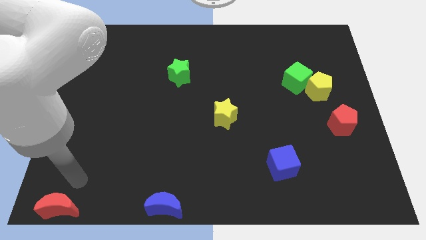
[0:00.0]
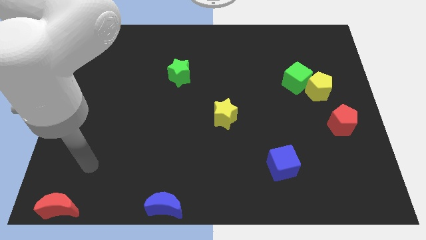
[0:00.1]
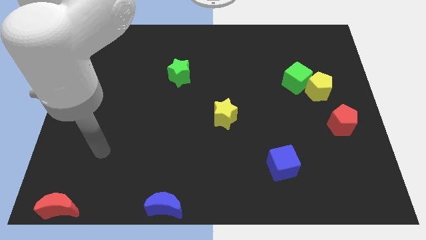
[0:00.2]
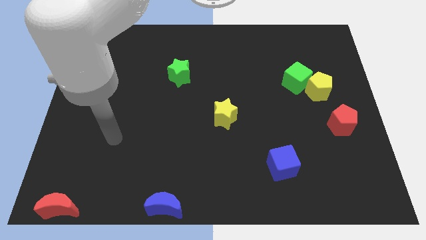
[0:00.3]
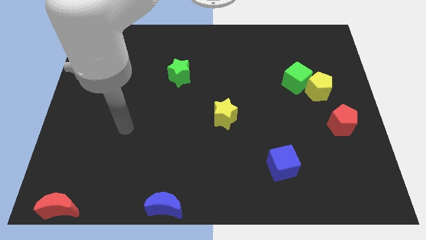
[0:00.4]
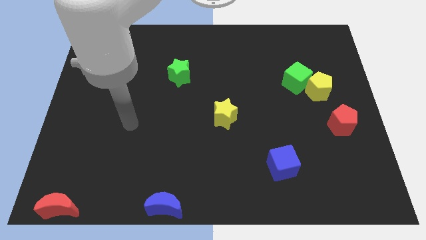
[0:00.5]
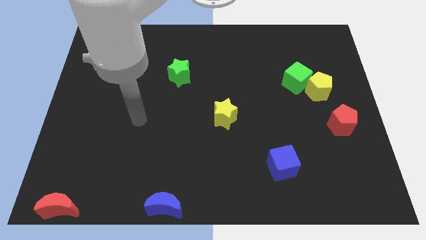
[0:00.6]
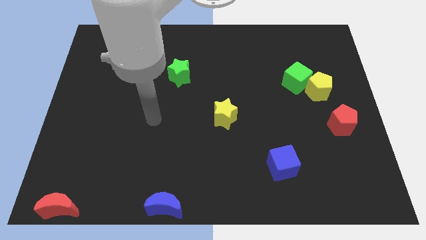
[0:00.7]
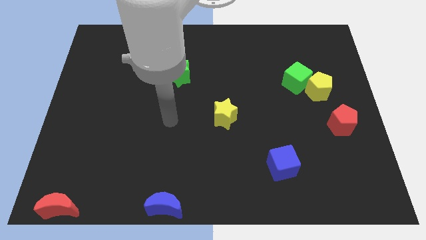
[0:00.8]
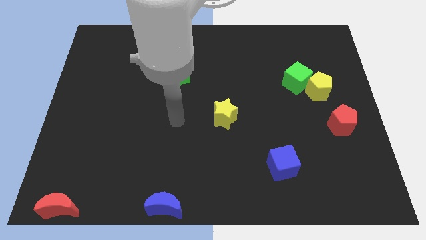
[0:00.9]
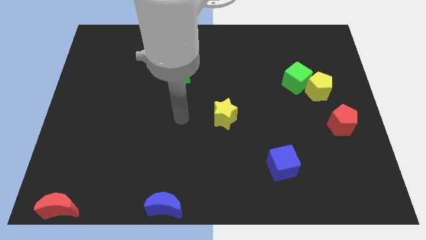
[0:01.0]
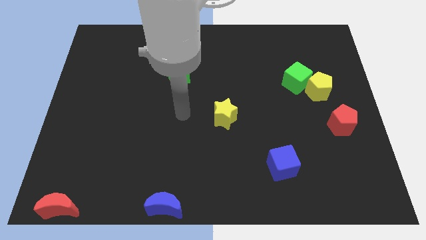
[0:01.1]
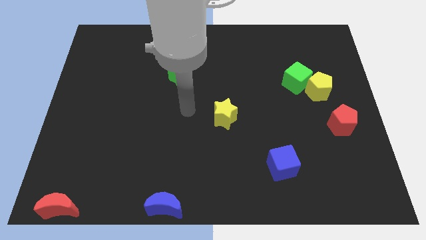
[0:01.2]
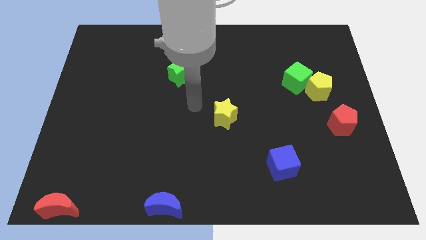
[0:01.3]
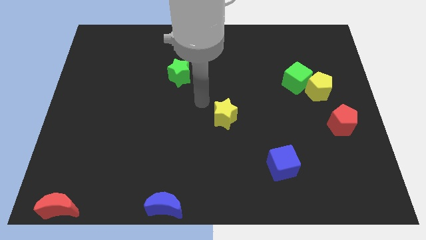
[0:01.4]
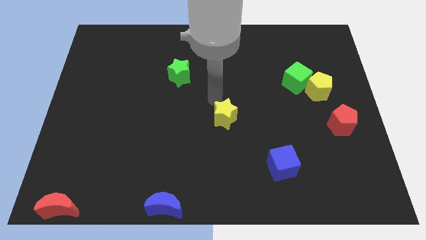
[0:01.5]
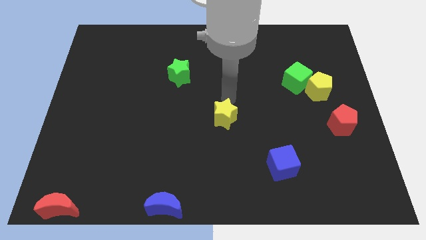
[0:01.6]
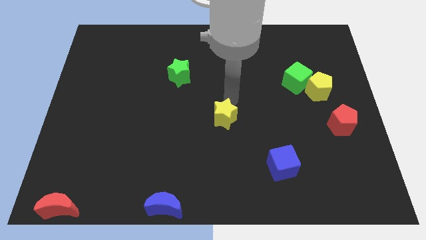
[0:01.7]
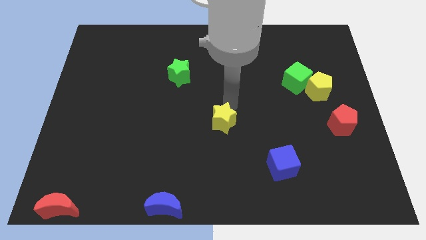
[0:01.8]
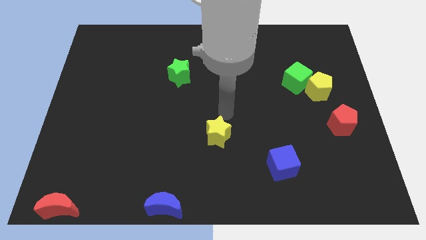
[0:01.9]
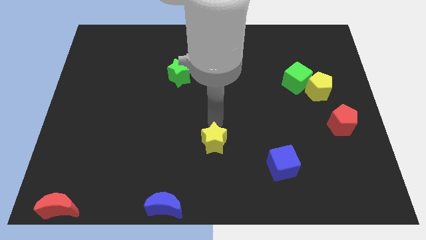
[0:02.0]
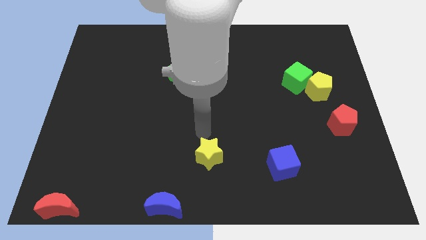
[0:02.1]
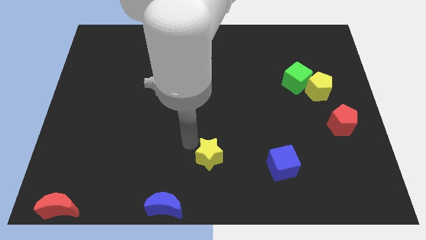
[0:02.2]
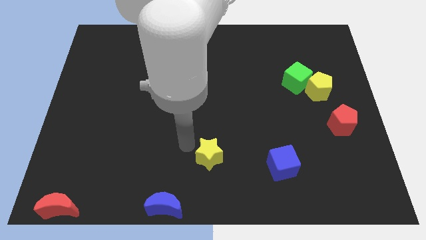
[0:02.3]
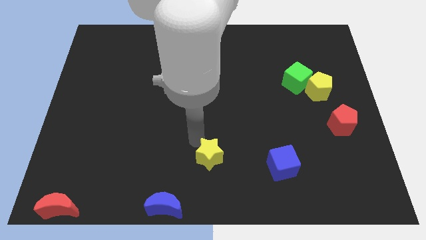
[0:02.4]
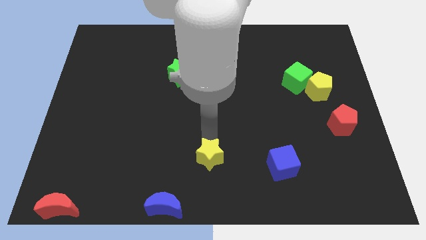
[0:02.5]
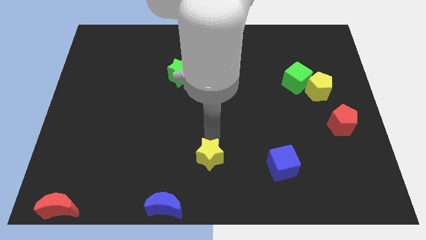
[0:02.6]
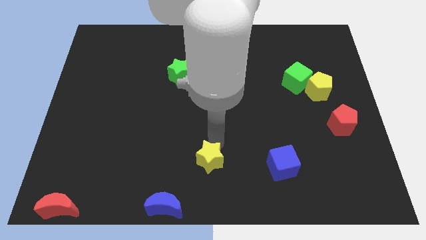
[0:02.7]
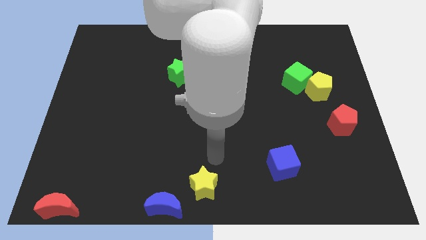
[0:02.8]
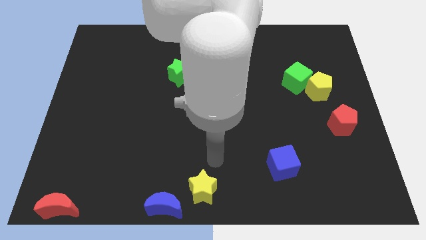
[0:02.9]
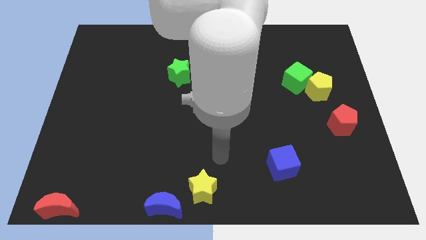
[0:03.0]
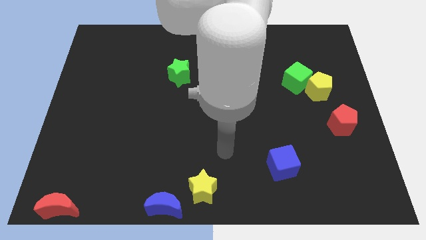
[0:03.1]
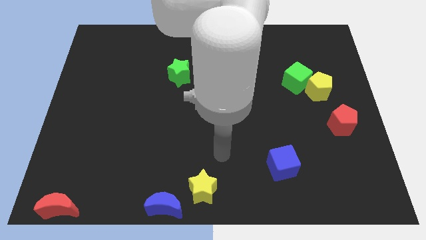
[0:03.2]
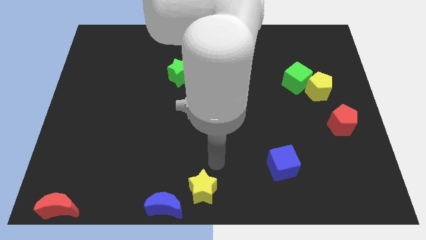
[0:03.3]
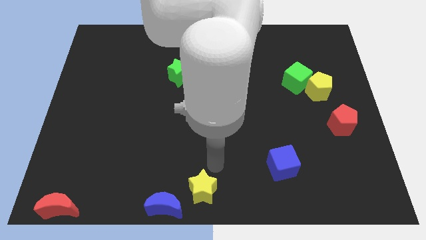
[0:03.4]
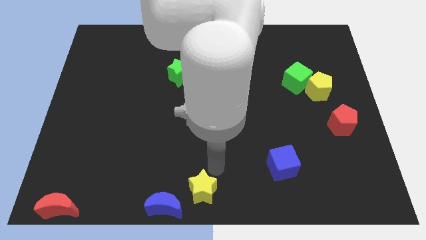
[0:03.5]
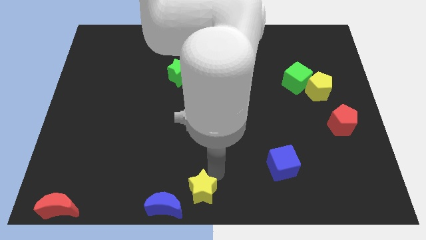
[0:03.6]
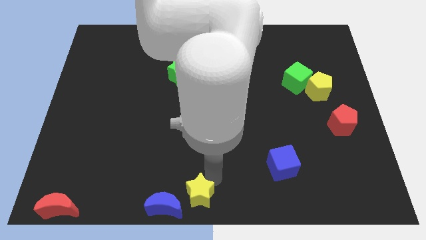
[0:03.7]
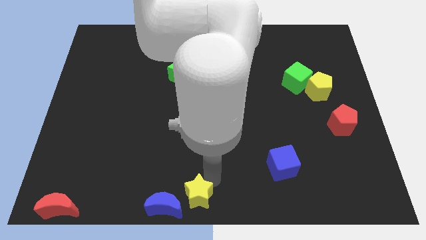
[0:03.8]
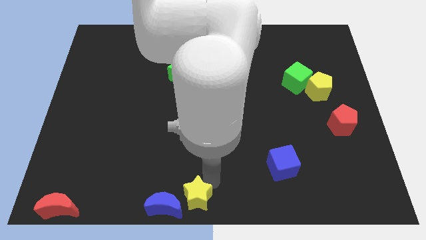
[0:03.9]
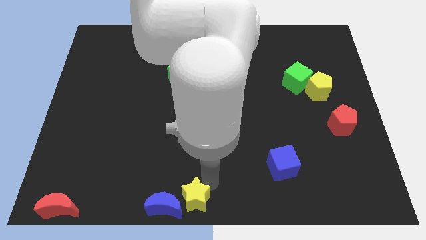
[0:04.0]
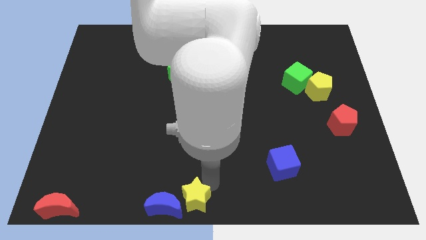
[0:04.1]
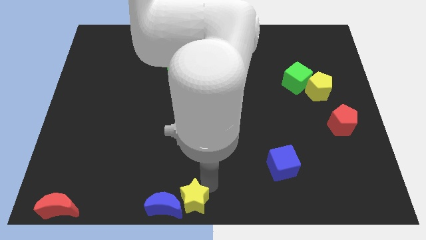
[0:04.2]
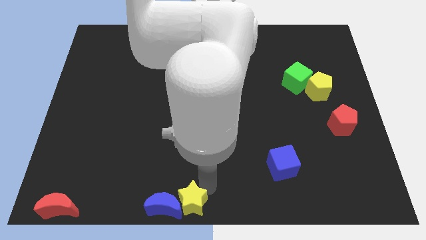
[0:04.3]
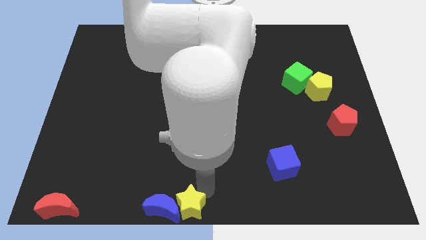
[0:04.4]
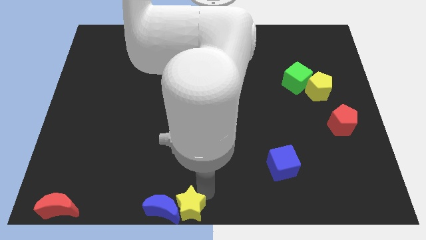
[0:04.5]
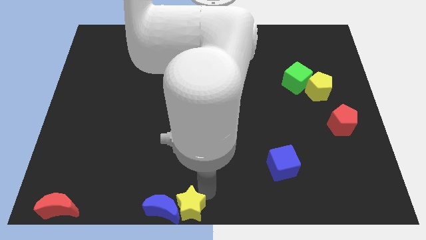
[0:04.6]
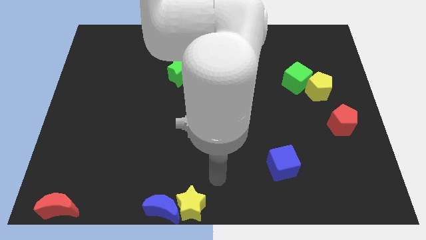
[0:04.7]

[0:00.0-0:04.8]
push the yellow star to the bottom center

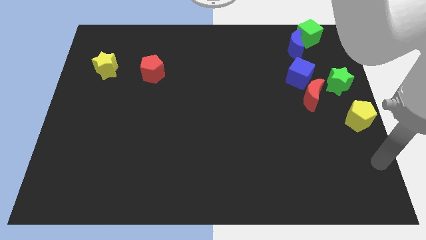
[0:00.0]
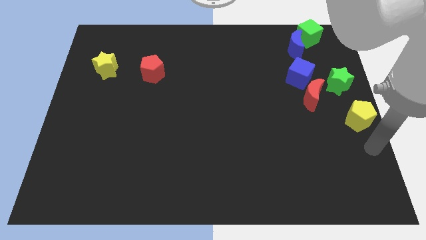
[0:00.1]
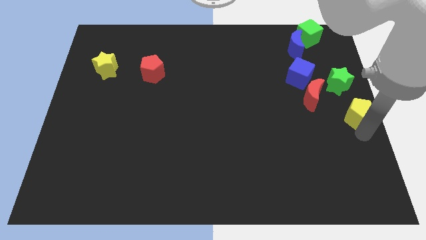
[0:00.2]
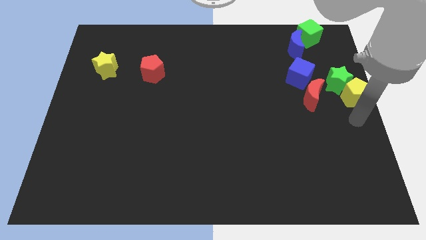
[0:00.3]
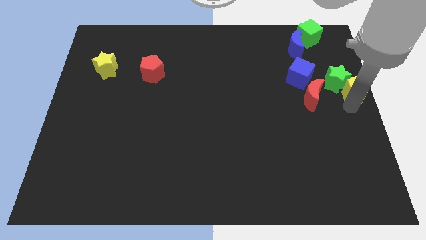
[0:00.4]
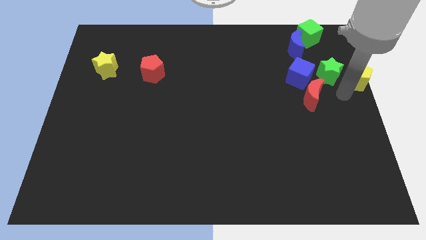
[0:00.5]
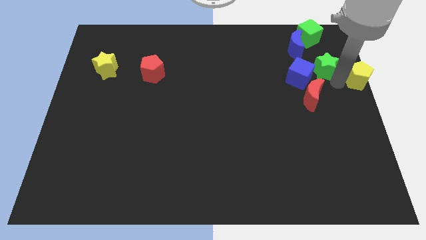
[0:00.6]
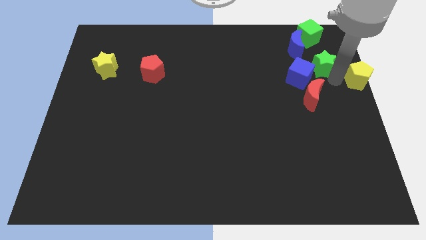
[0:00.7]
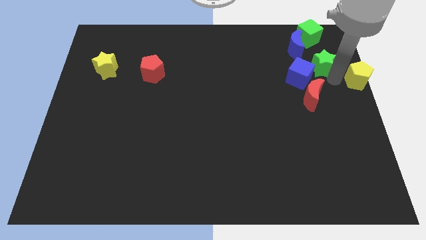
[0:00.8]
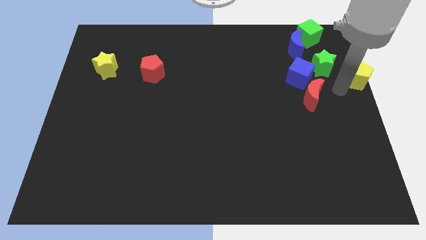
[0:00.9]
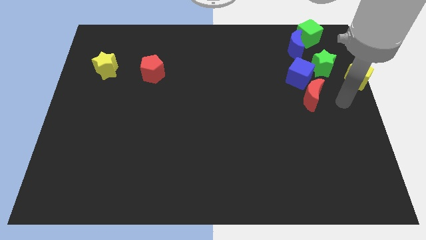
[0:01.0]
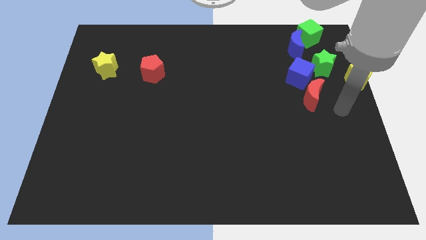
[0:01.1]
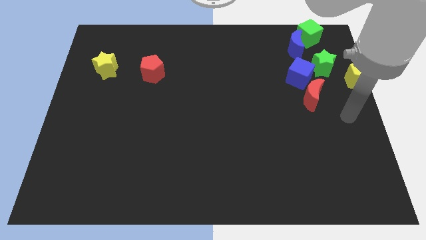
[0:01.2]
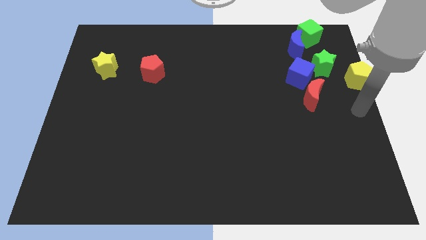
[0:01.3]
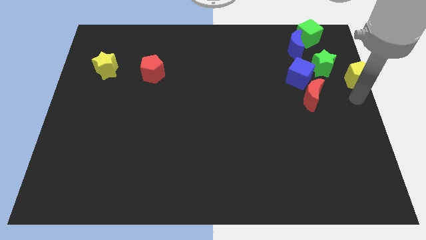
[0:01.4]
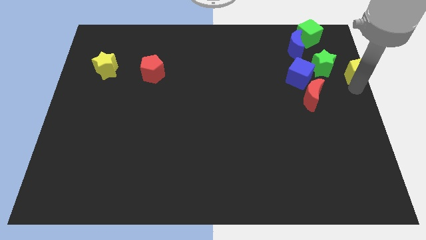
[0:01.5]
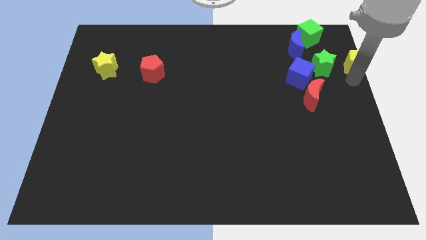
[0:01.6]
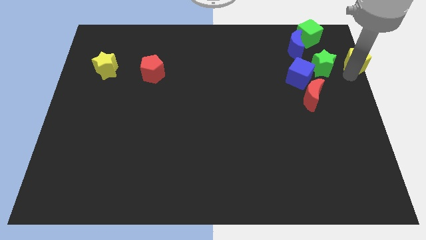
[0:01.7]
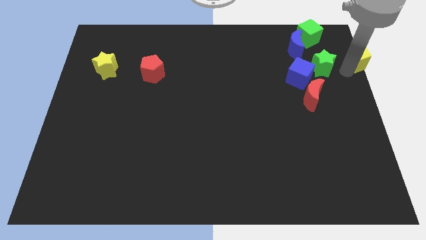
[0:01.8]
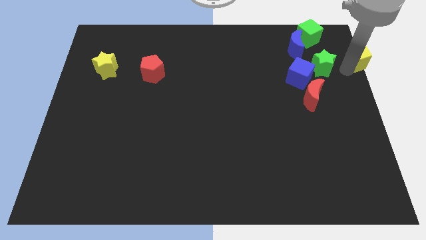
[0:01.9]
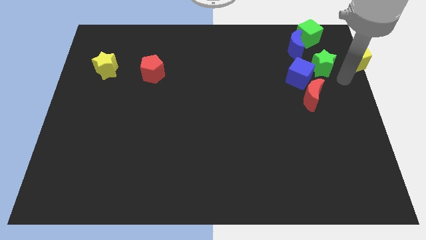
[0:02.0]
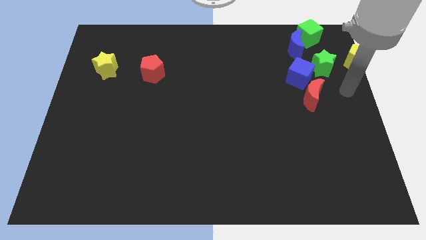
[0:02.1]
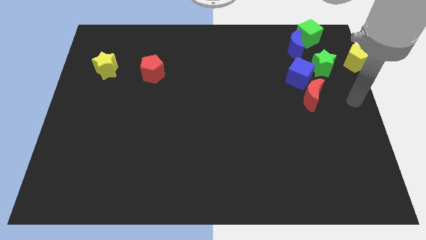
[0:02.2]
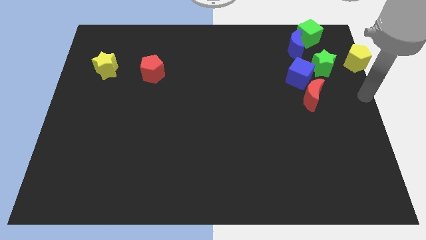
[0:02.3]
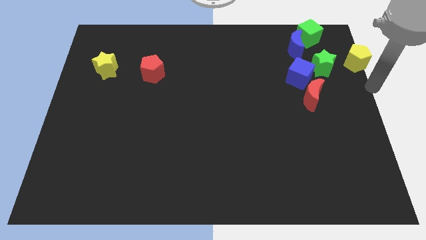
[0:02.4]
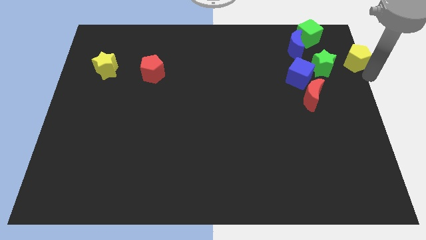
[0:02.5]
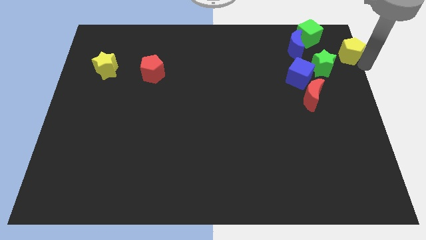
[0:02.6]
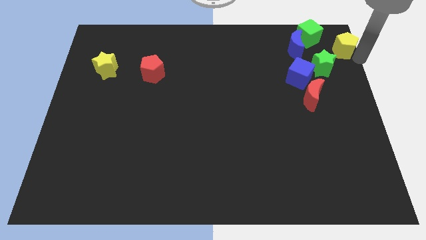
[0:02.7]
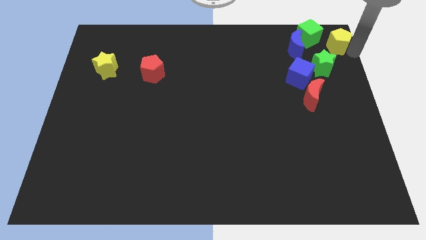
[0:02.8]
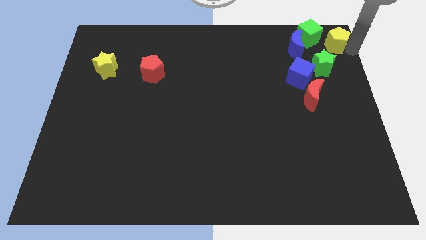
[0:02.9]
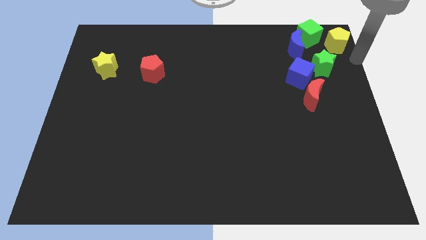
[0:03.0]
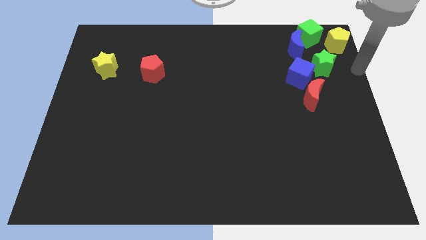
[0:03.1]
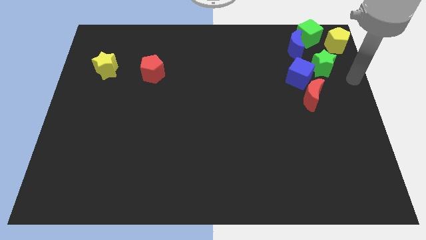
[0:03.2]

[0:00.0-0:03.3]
push the green star upwards and yellow penatgon to the corner right

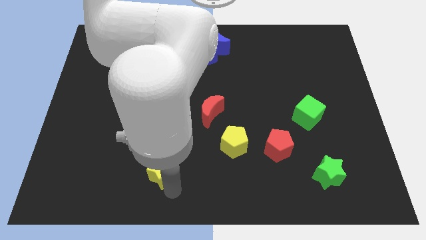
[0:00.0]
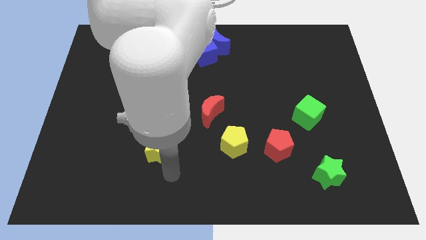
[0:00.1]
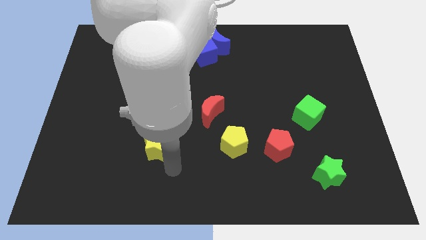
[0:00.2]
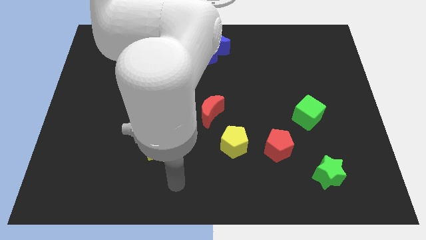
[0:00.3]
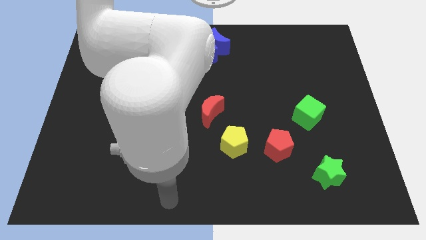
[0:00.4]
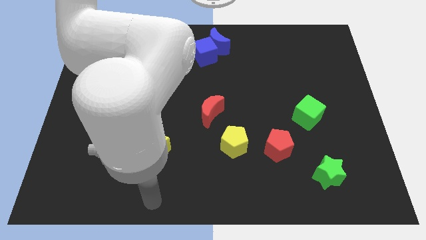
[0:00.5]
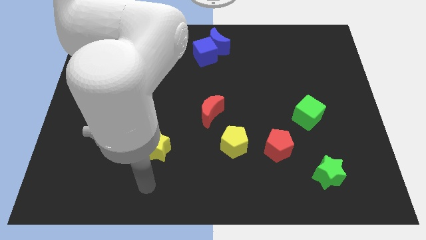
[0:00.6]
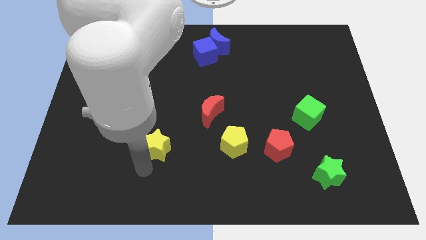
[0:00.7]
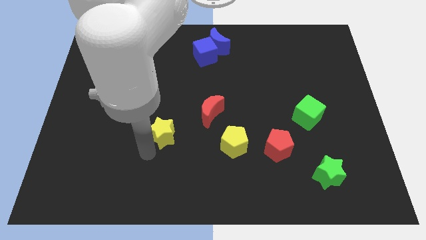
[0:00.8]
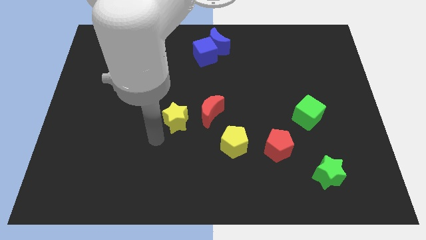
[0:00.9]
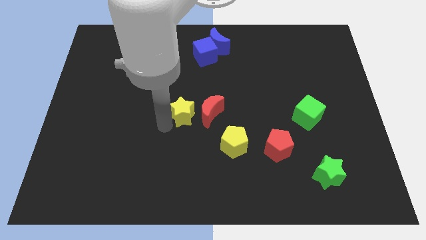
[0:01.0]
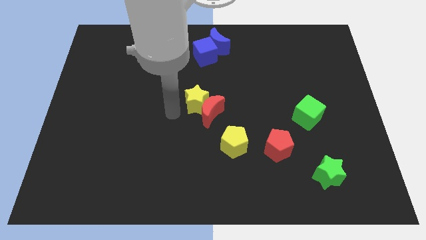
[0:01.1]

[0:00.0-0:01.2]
move yellow star to the left of the red crescent
